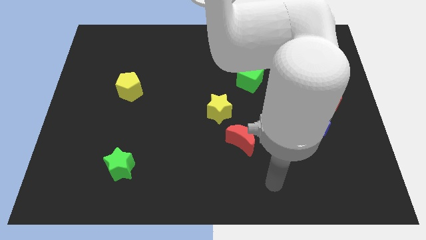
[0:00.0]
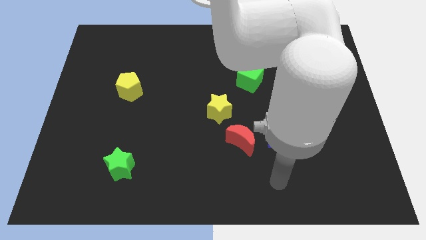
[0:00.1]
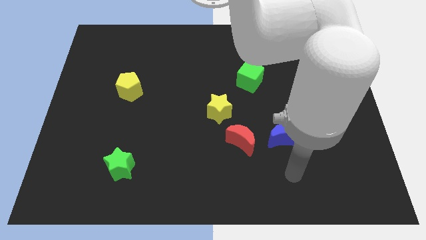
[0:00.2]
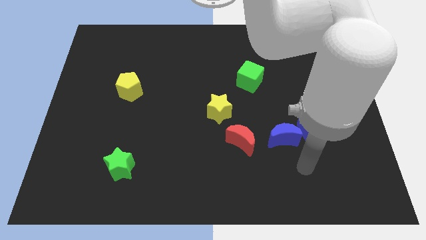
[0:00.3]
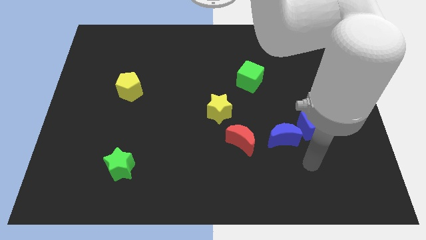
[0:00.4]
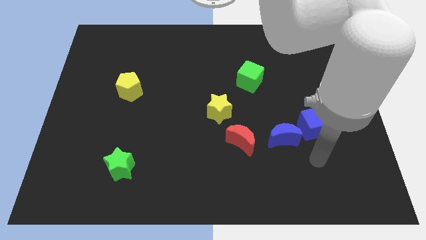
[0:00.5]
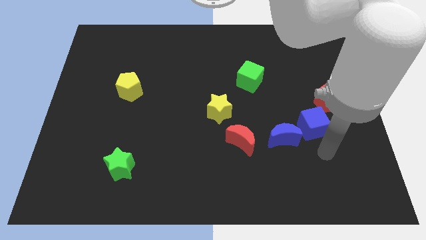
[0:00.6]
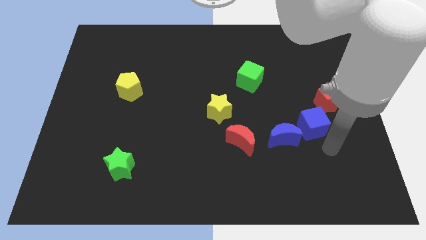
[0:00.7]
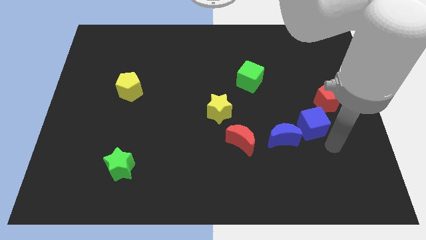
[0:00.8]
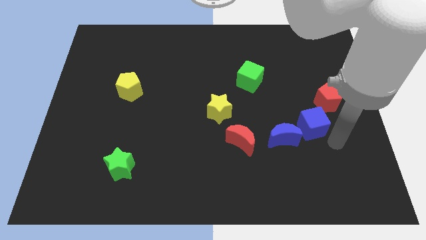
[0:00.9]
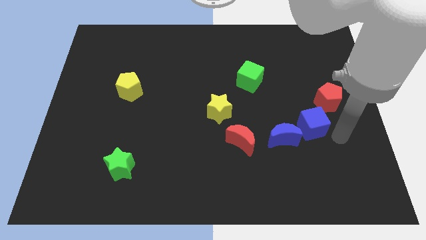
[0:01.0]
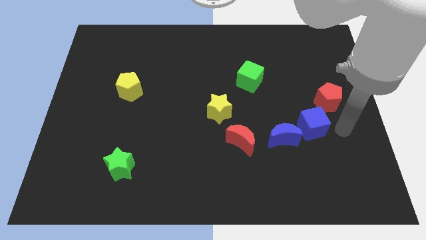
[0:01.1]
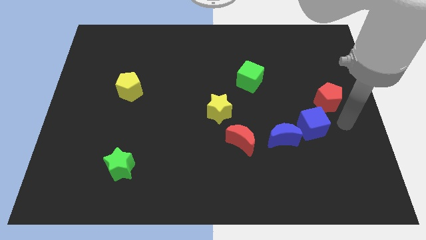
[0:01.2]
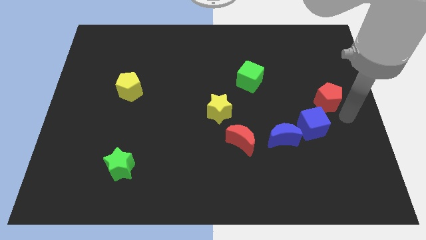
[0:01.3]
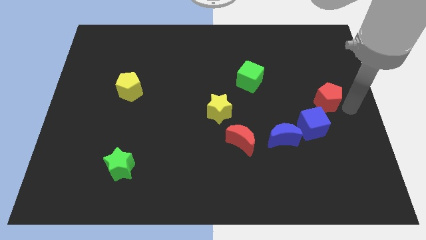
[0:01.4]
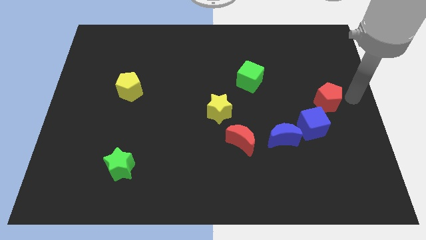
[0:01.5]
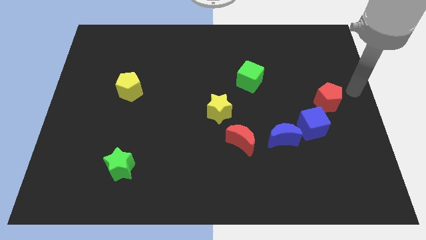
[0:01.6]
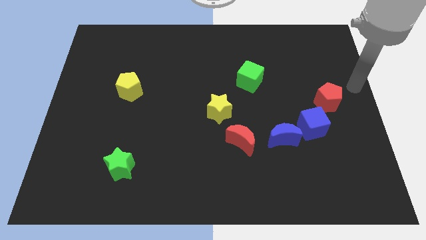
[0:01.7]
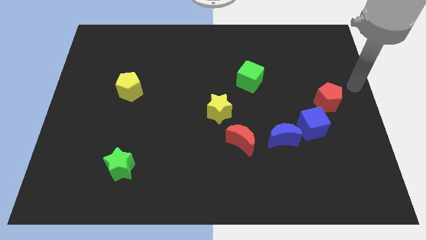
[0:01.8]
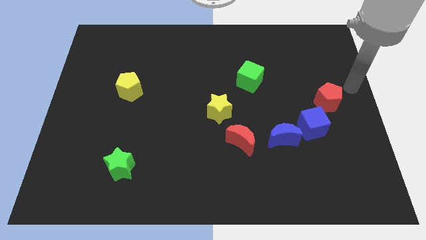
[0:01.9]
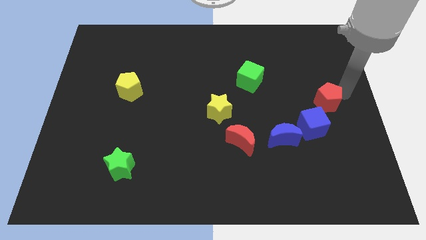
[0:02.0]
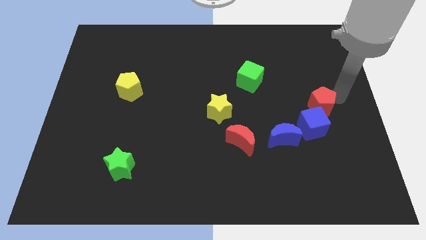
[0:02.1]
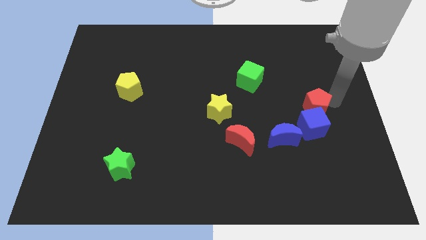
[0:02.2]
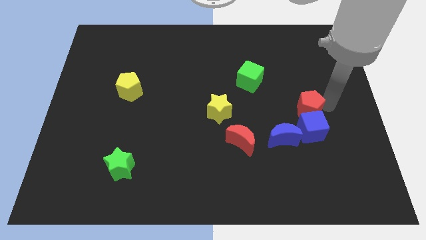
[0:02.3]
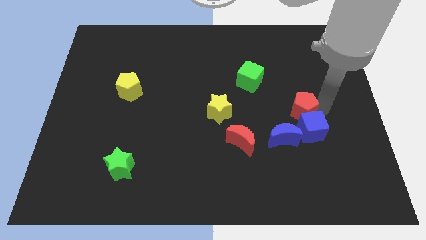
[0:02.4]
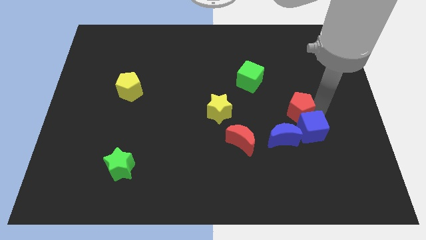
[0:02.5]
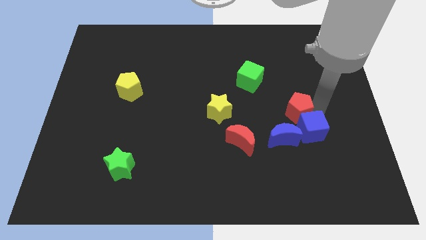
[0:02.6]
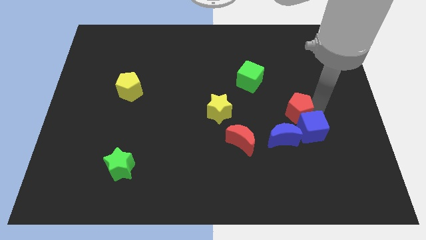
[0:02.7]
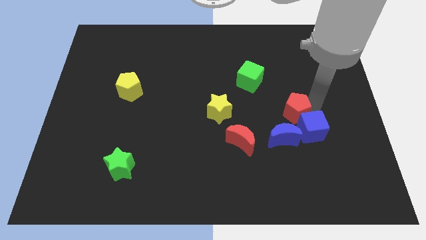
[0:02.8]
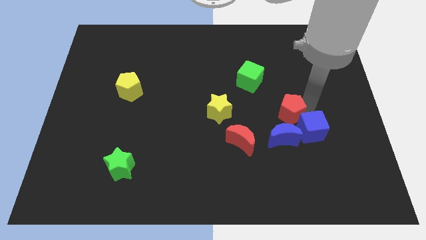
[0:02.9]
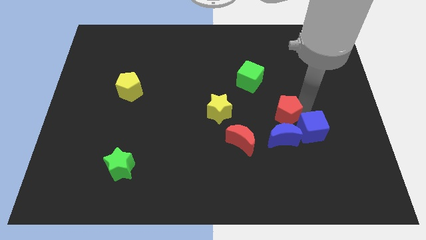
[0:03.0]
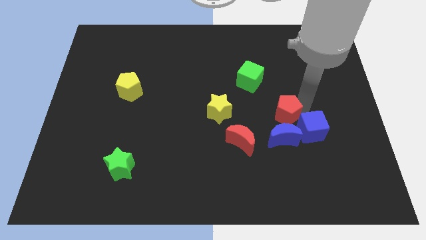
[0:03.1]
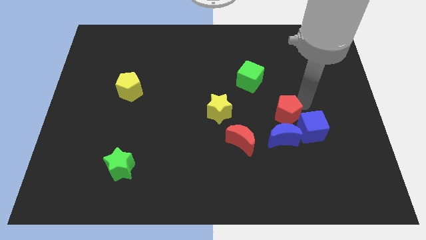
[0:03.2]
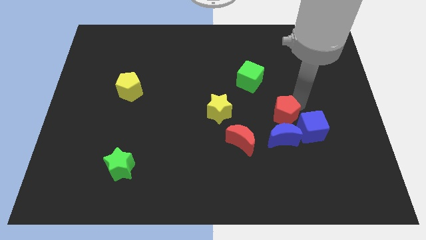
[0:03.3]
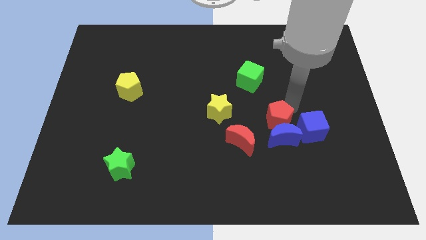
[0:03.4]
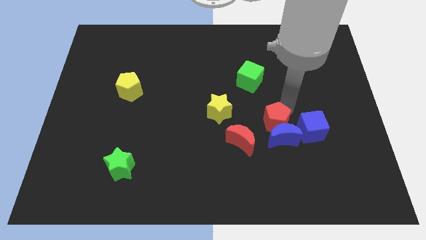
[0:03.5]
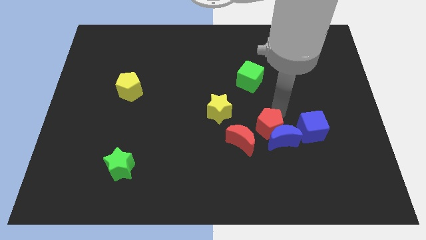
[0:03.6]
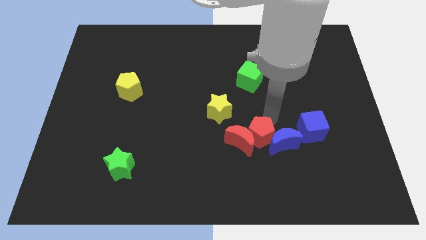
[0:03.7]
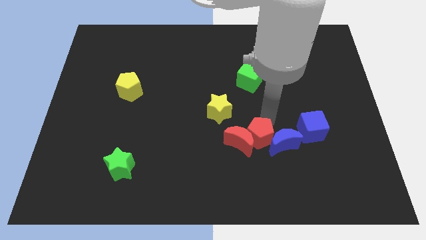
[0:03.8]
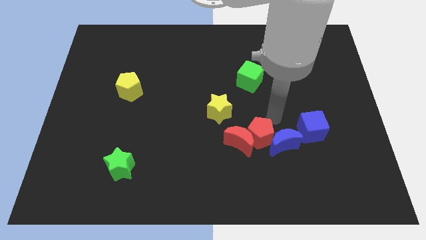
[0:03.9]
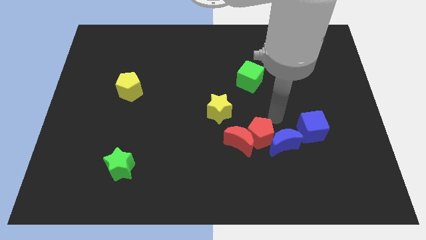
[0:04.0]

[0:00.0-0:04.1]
push the red pentagon into the red crescent and blue crescent

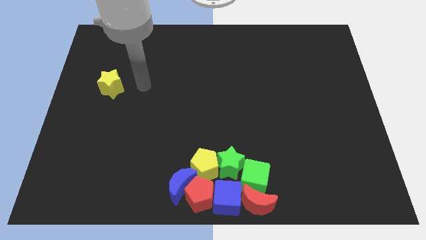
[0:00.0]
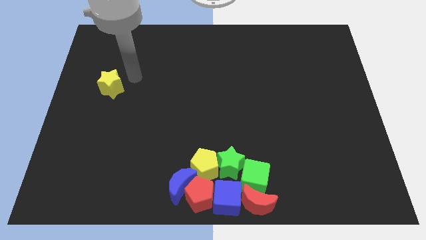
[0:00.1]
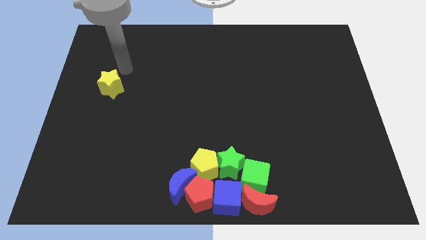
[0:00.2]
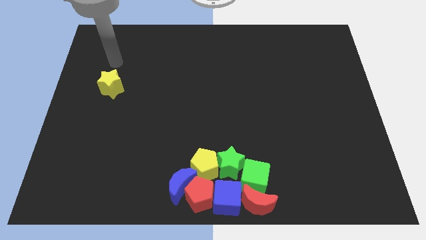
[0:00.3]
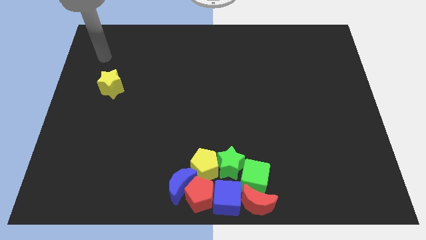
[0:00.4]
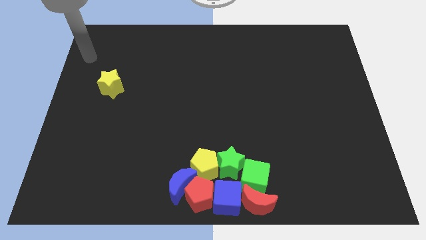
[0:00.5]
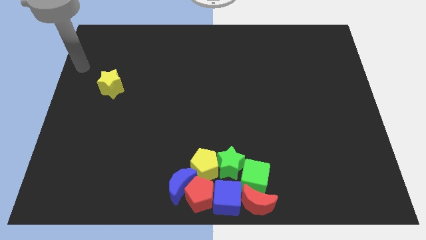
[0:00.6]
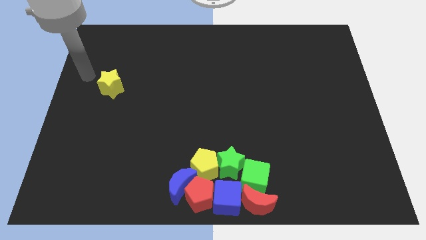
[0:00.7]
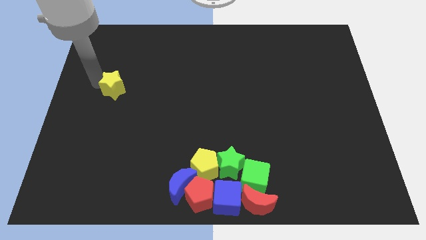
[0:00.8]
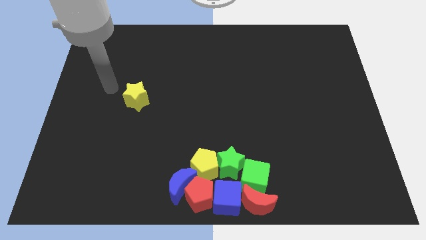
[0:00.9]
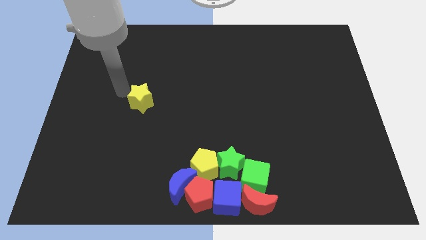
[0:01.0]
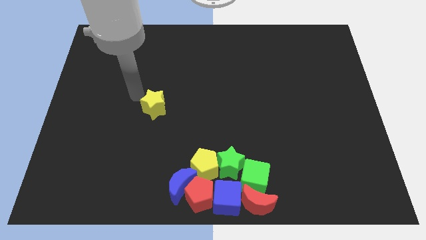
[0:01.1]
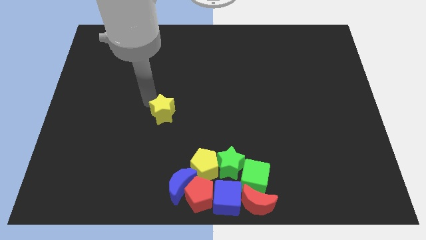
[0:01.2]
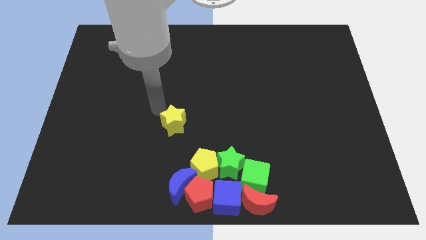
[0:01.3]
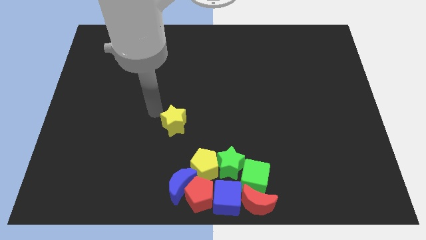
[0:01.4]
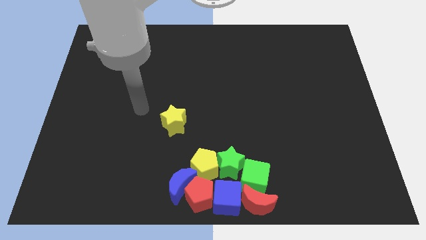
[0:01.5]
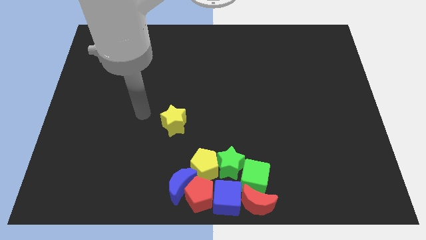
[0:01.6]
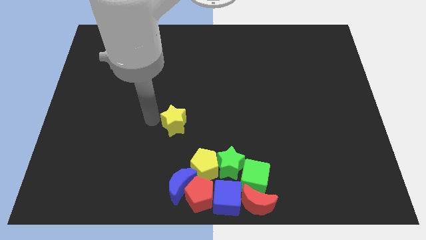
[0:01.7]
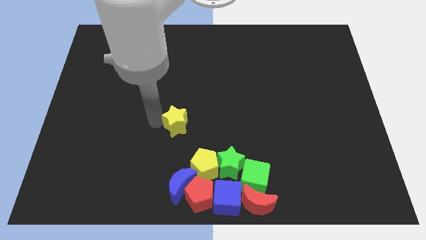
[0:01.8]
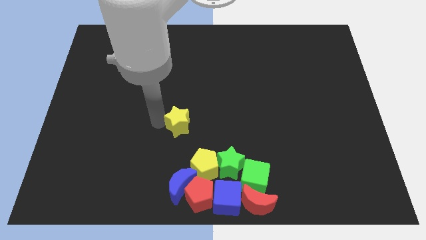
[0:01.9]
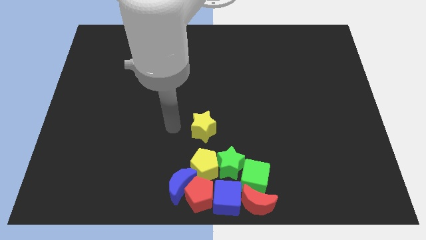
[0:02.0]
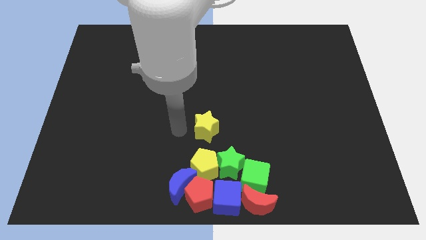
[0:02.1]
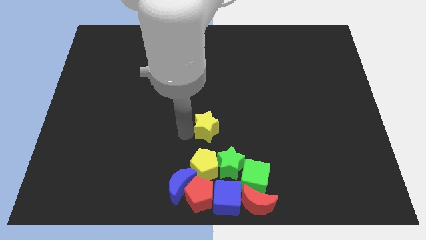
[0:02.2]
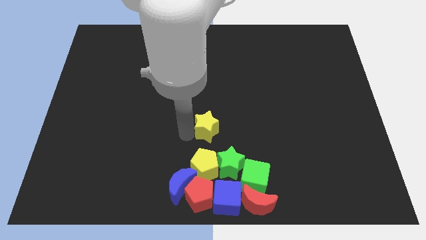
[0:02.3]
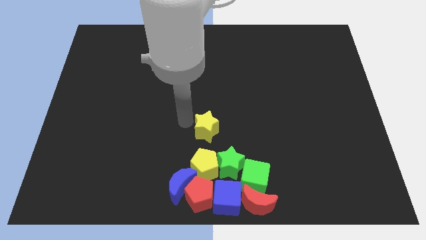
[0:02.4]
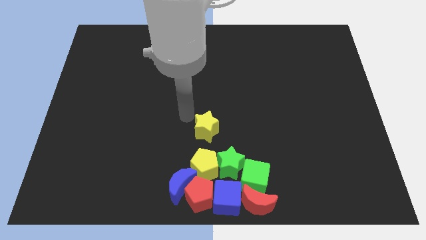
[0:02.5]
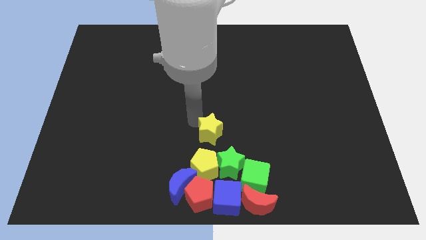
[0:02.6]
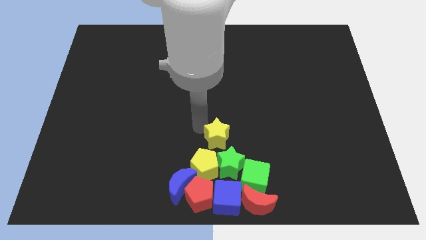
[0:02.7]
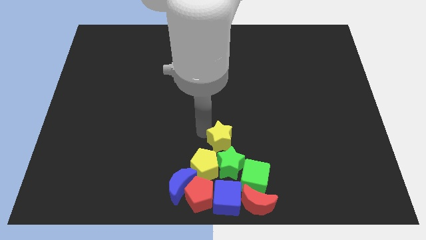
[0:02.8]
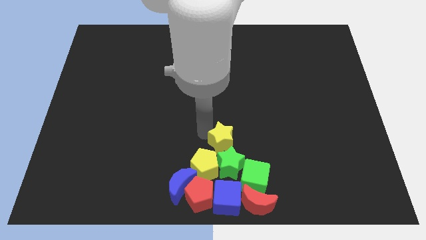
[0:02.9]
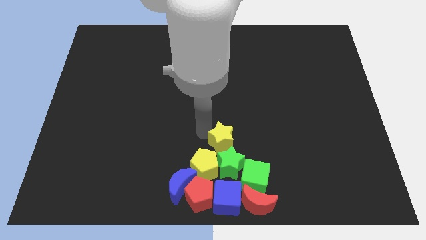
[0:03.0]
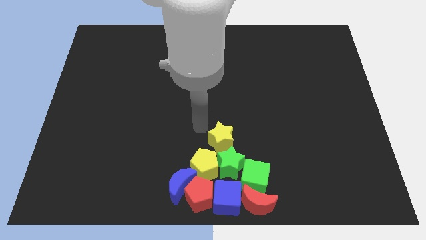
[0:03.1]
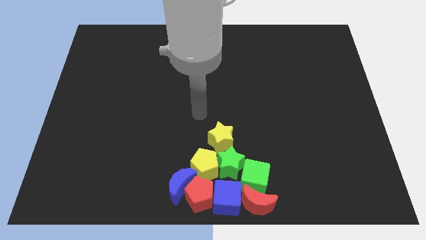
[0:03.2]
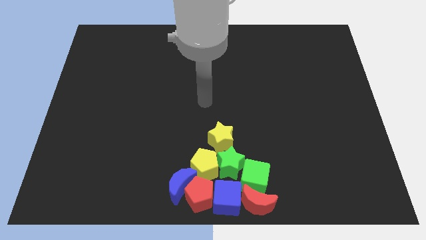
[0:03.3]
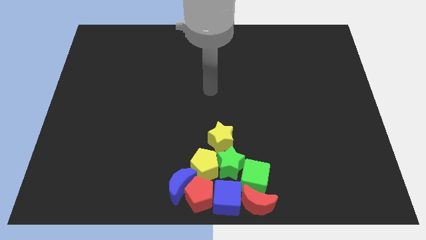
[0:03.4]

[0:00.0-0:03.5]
add yellow star to the group of blocks

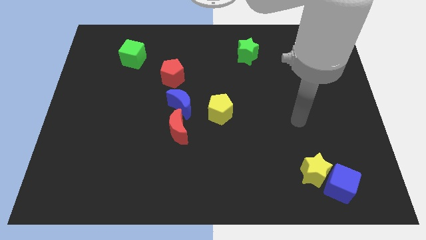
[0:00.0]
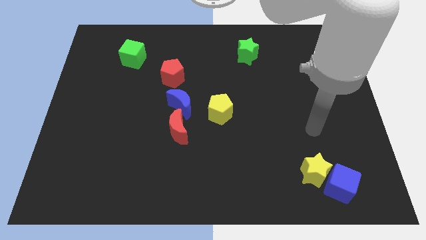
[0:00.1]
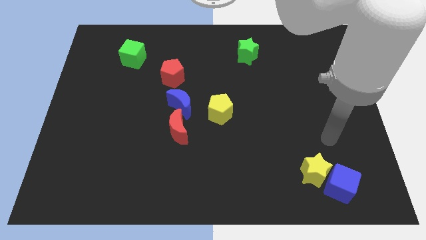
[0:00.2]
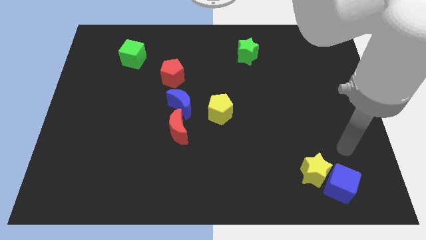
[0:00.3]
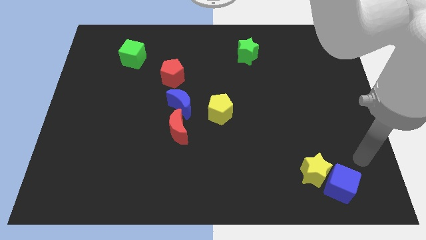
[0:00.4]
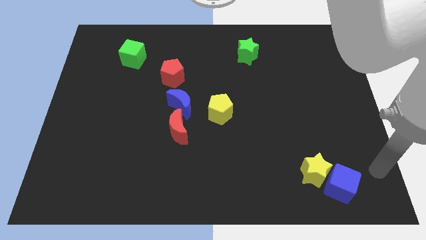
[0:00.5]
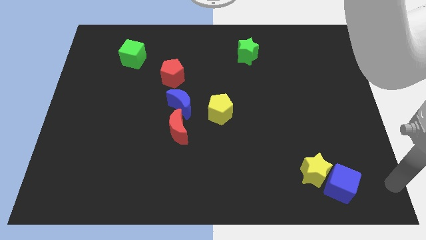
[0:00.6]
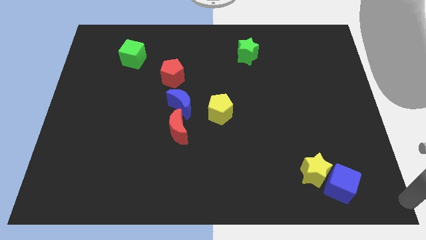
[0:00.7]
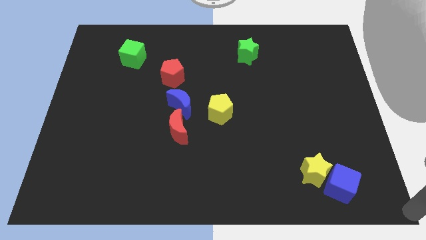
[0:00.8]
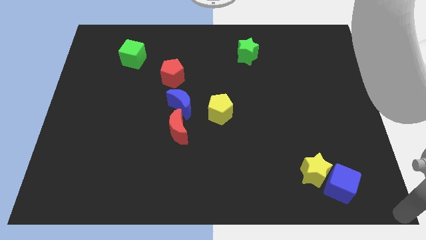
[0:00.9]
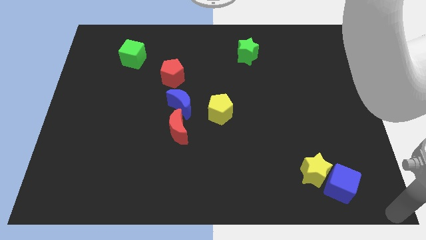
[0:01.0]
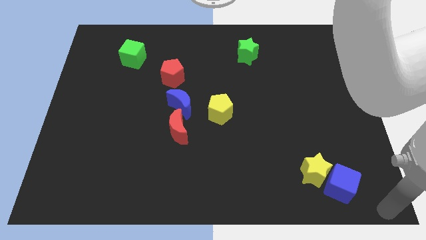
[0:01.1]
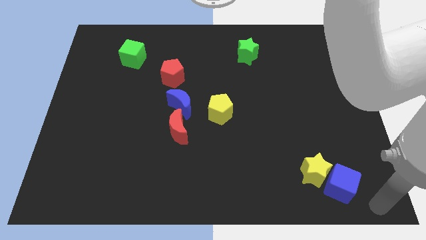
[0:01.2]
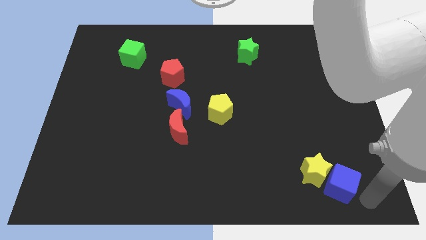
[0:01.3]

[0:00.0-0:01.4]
place your arm at the right side of the blue cube
